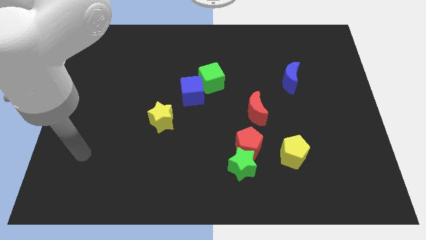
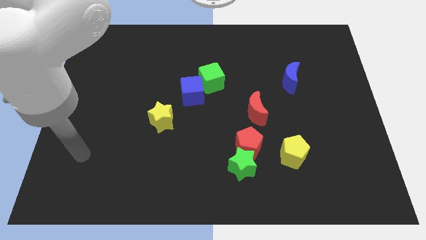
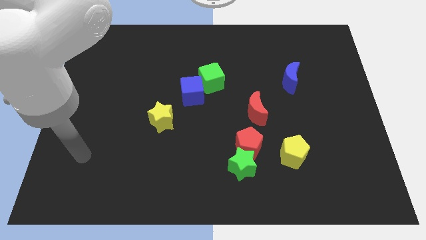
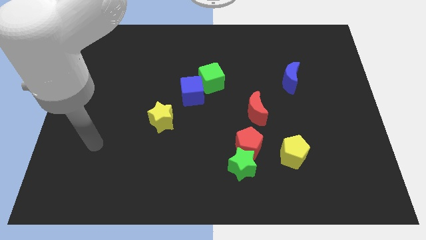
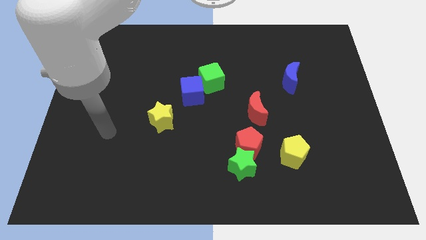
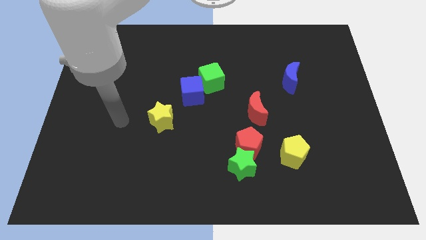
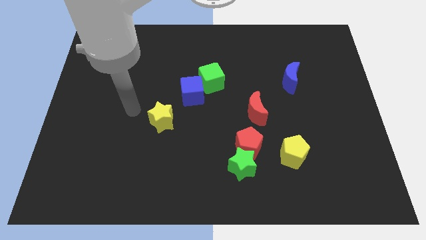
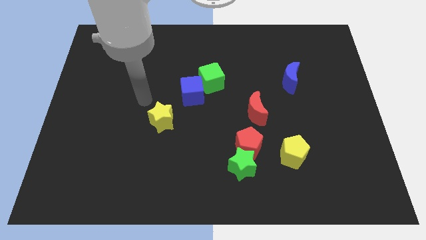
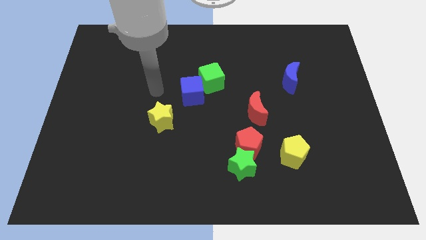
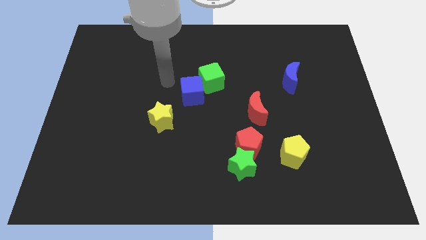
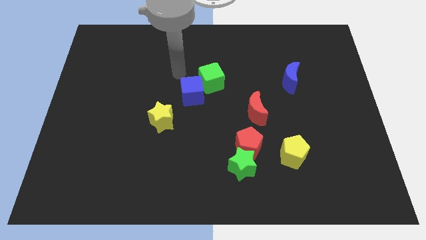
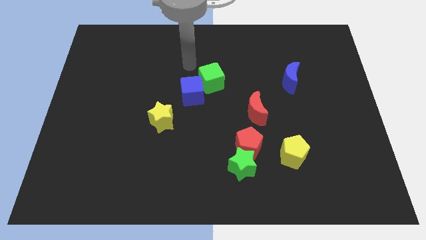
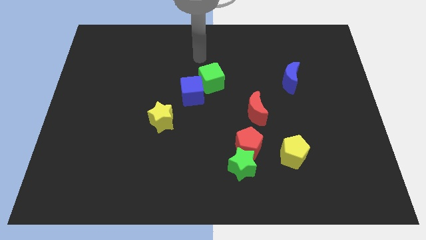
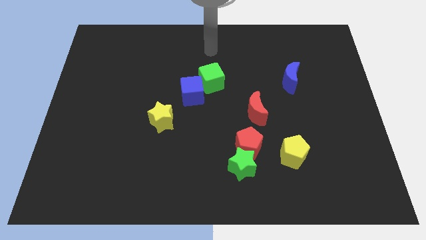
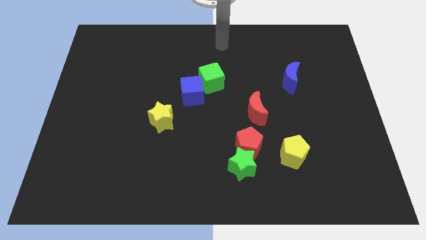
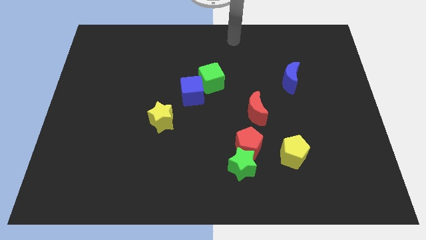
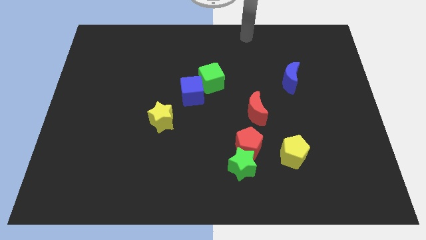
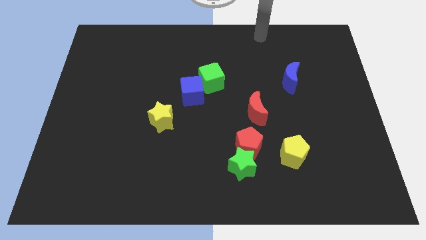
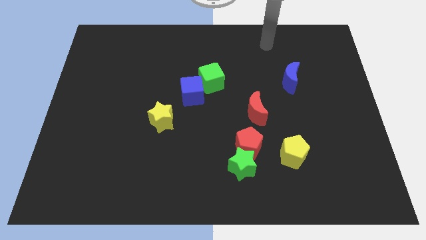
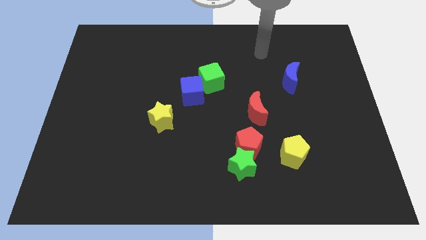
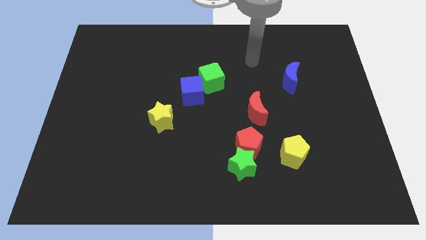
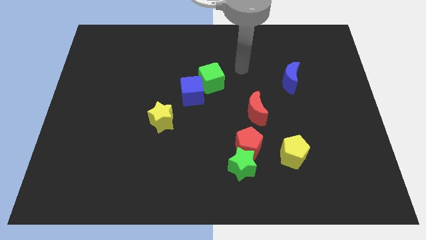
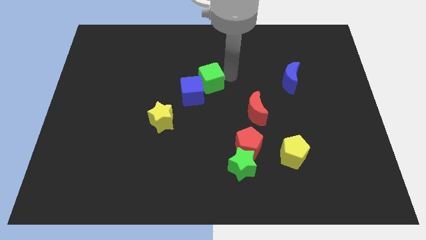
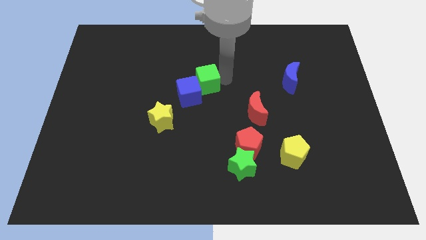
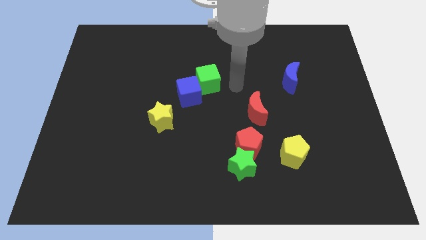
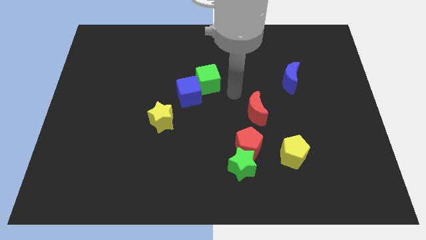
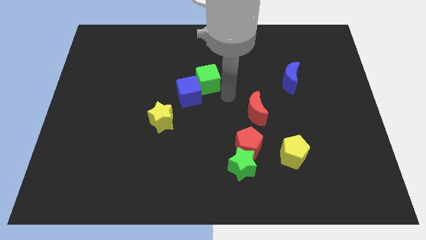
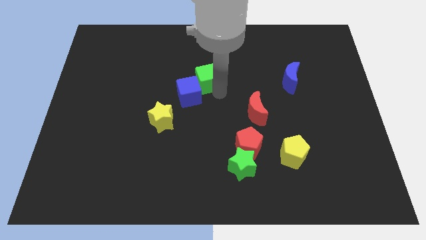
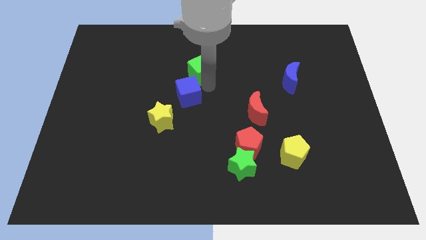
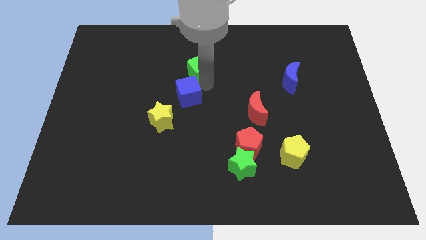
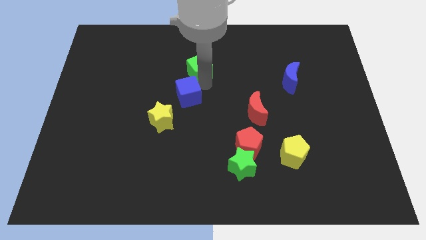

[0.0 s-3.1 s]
move arm to the right bottom side of green cube

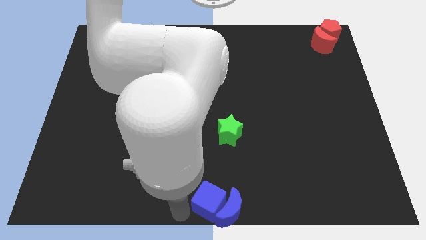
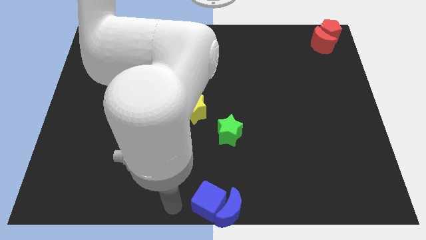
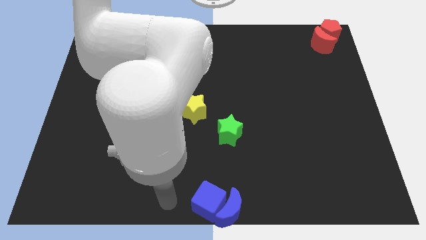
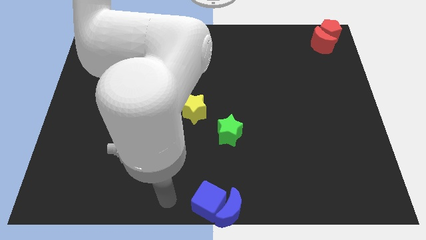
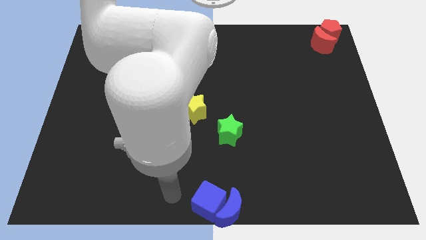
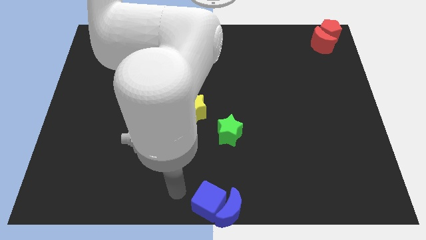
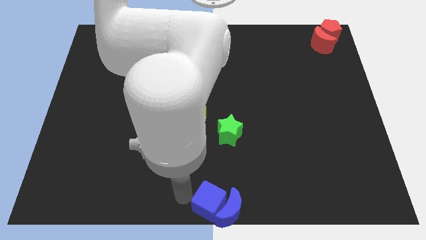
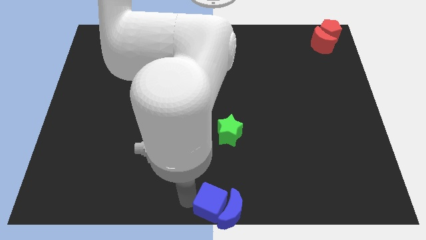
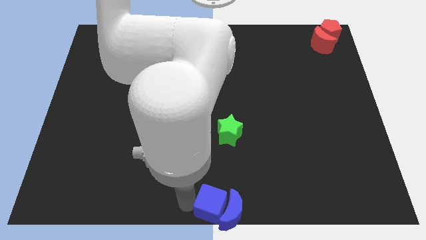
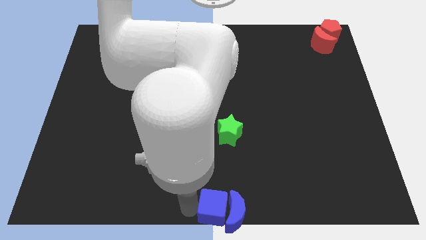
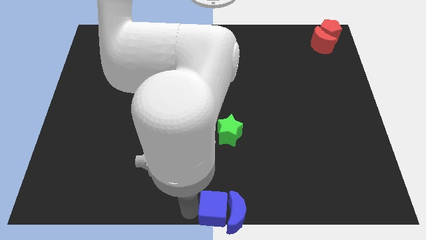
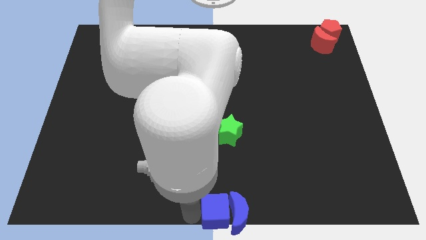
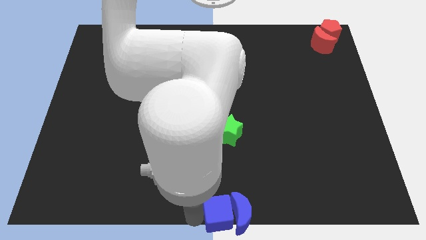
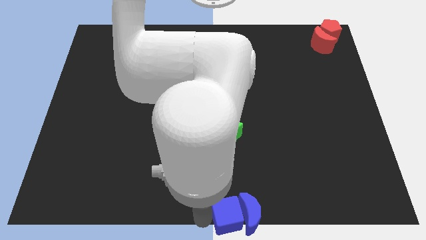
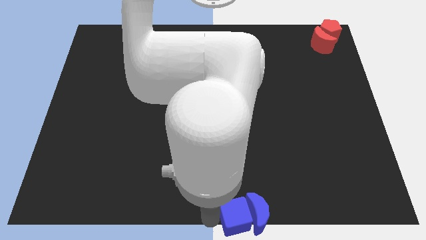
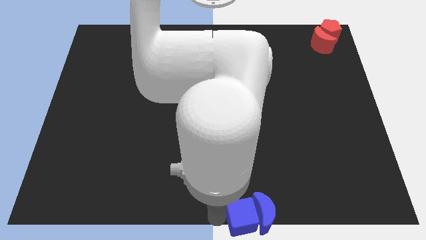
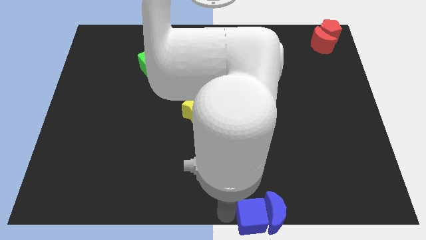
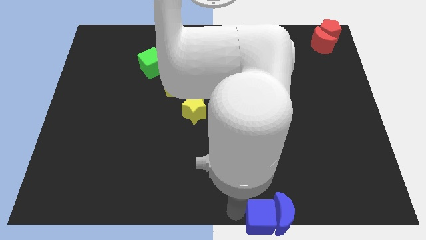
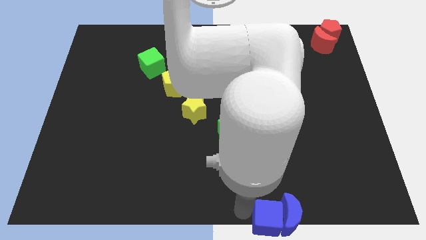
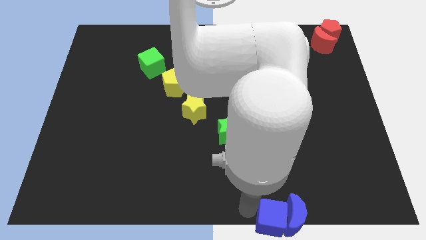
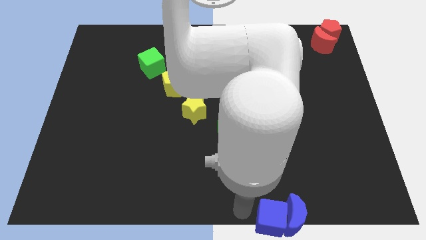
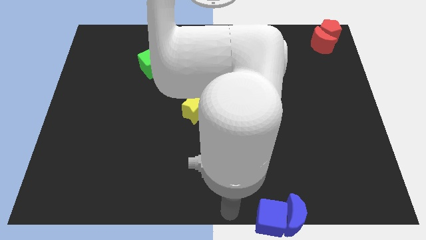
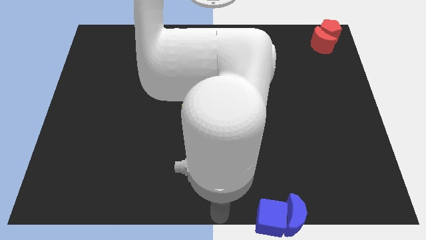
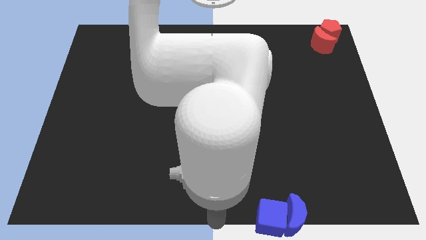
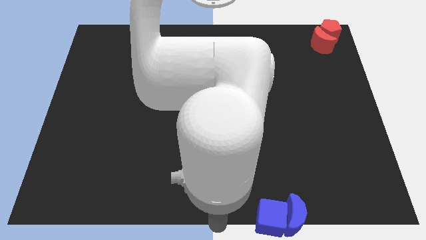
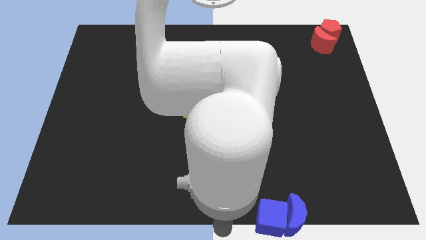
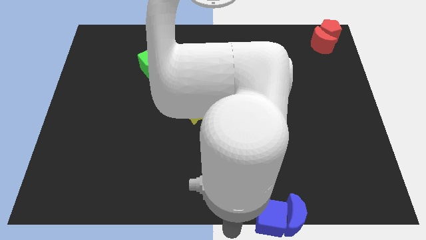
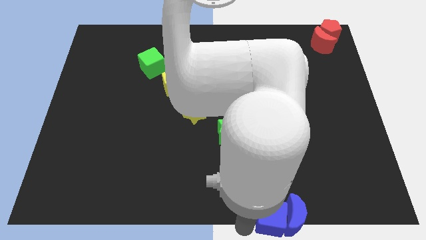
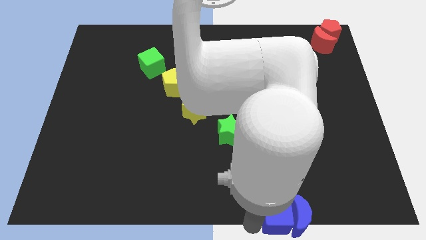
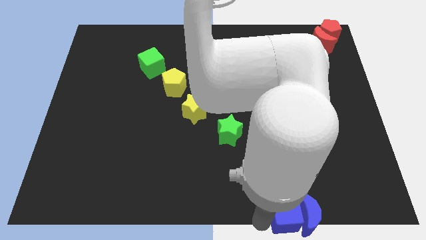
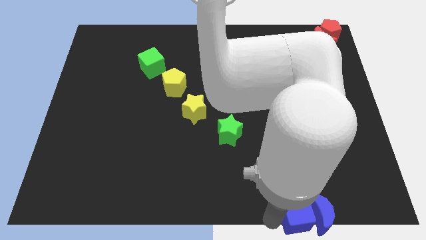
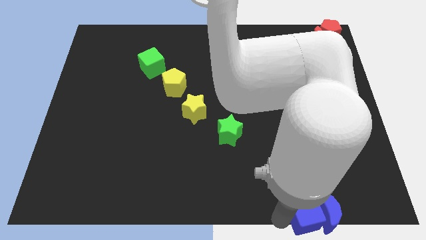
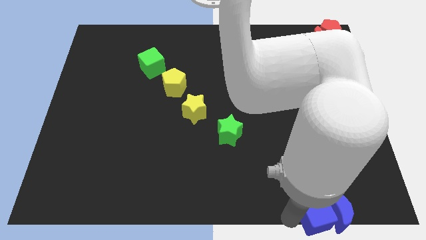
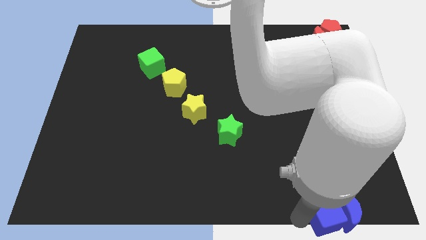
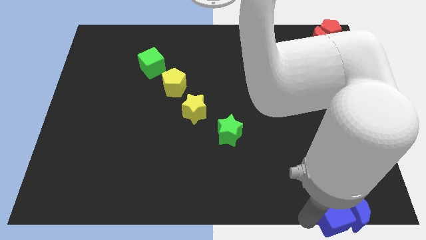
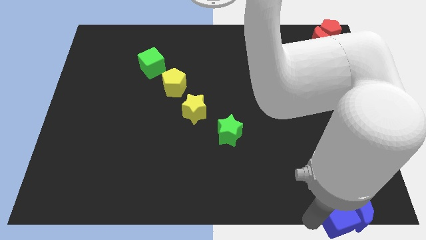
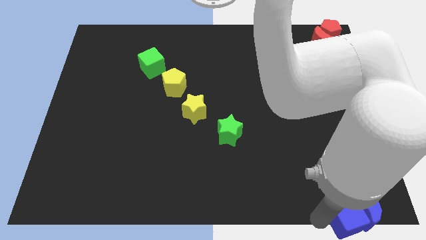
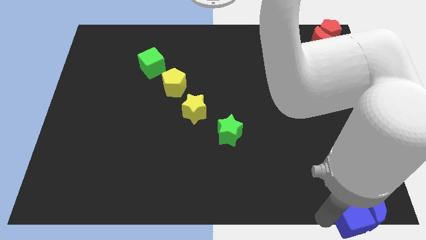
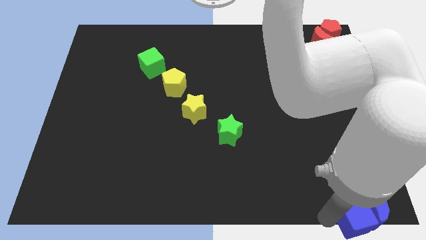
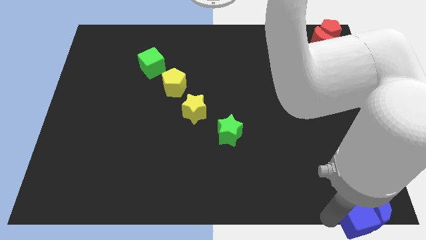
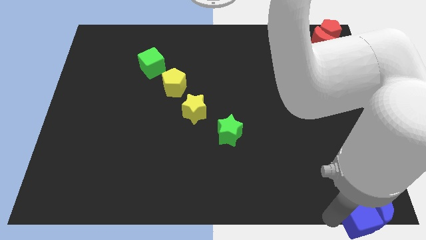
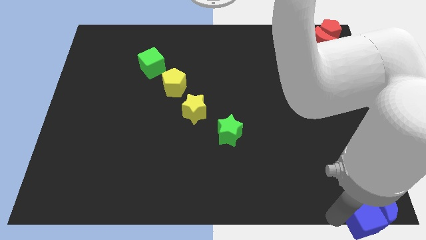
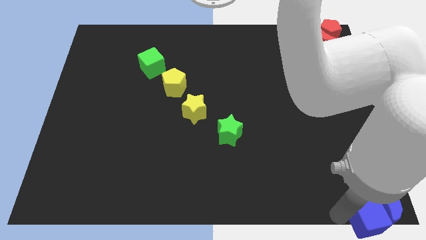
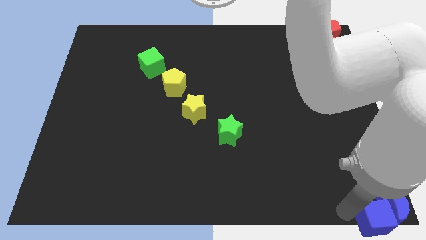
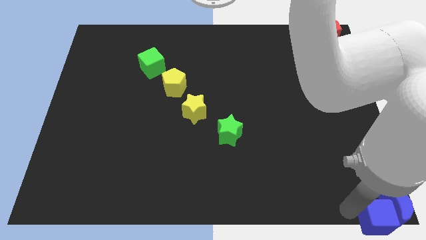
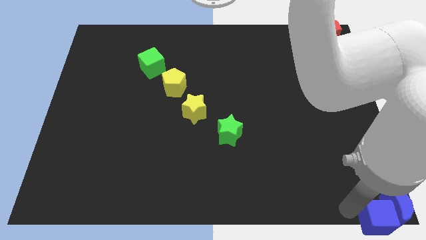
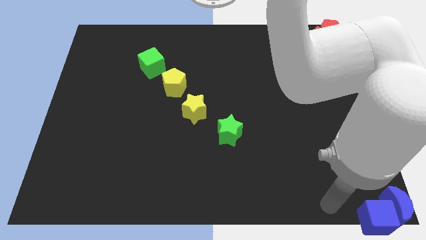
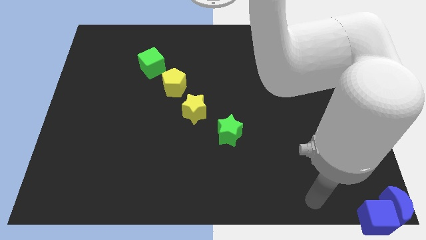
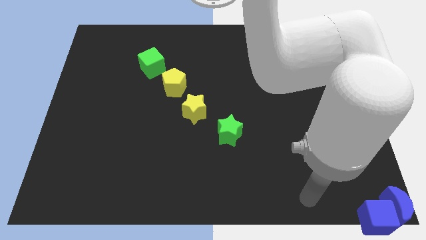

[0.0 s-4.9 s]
push the blue cube and blue moon to the bottom right corner of the board

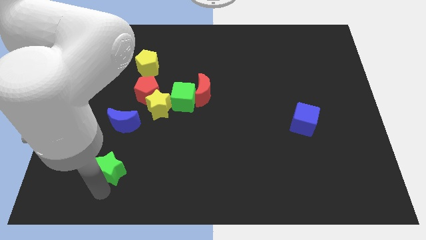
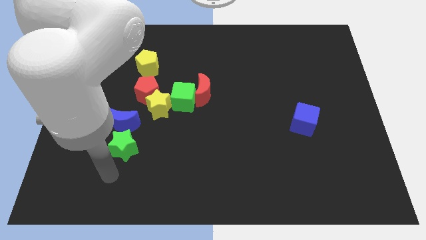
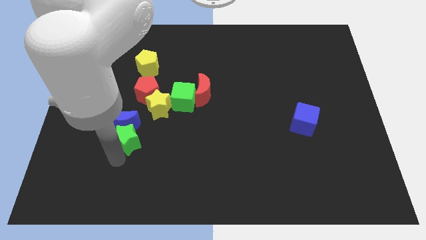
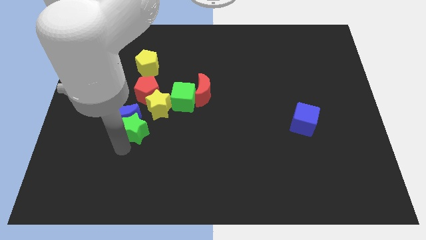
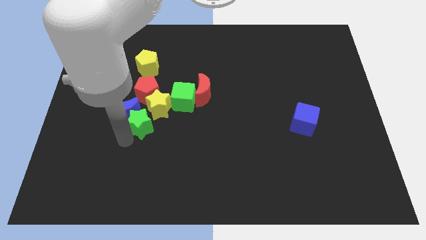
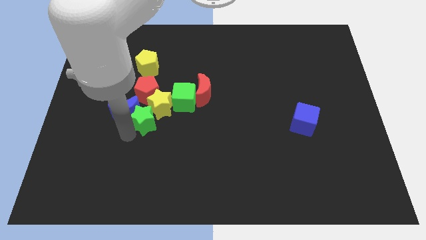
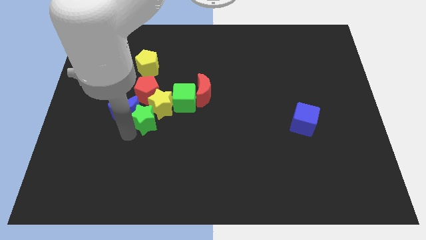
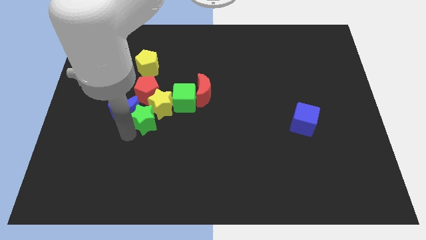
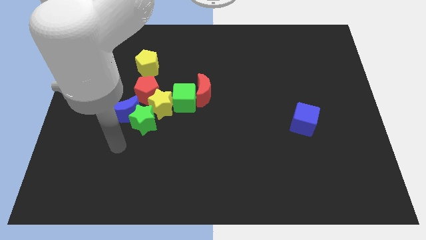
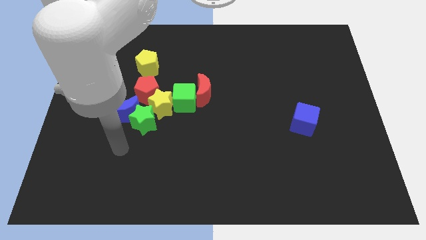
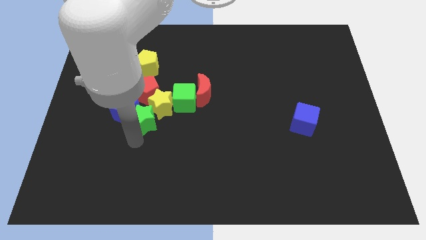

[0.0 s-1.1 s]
push the green star to the group of blocks
